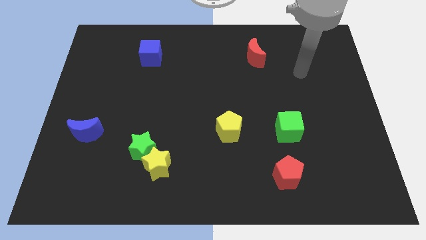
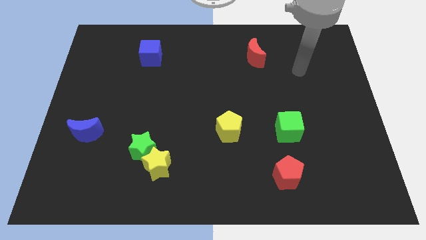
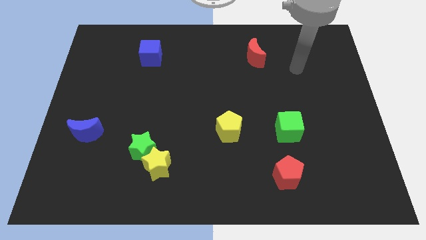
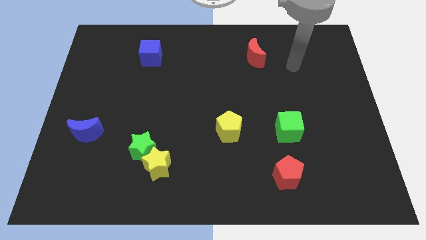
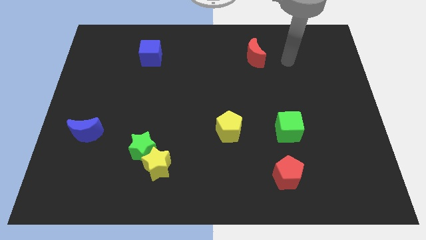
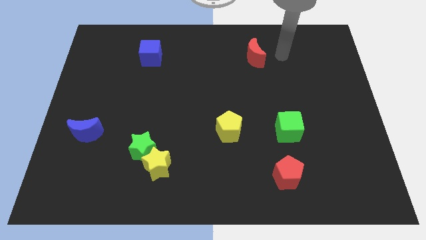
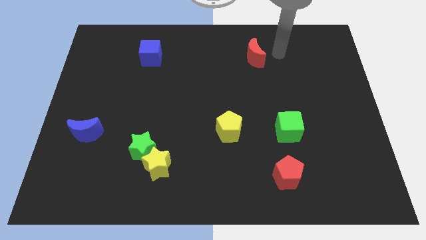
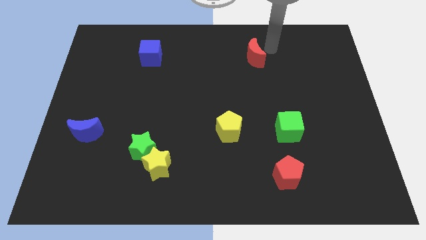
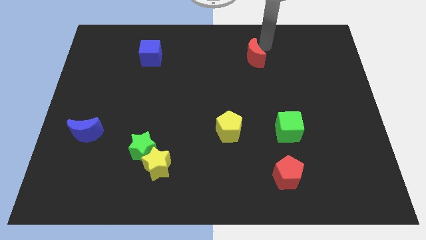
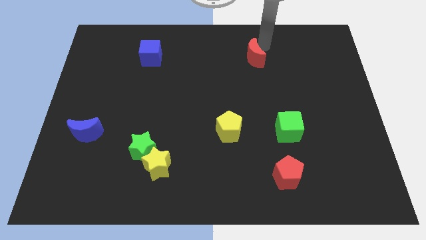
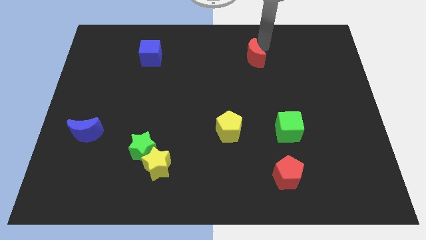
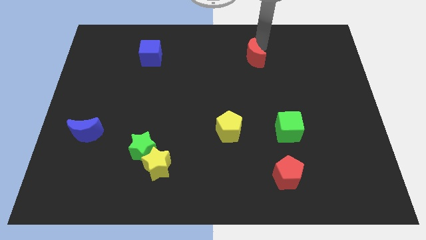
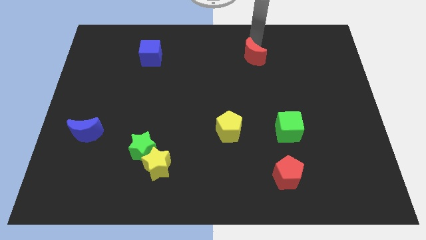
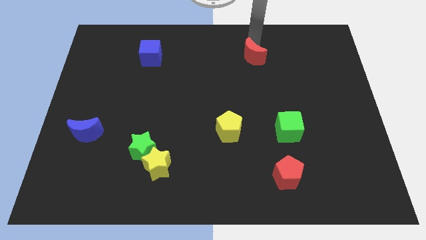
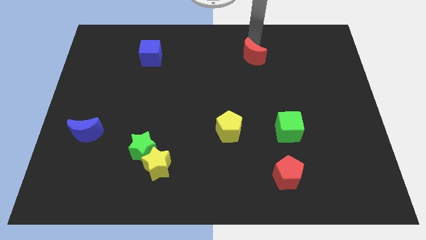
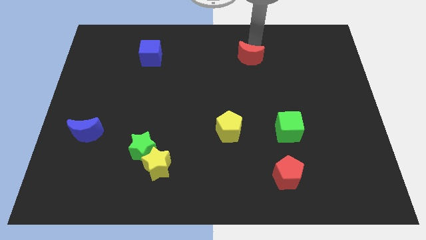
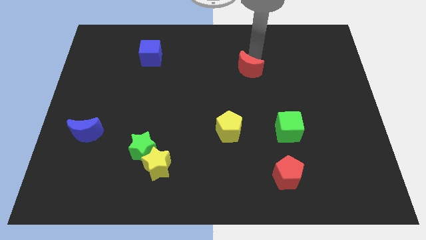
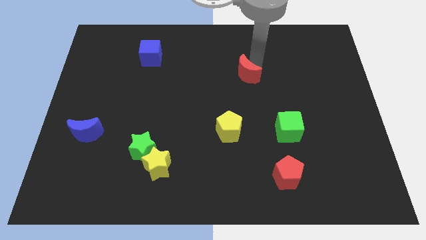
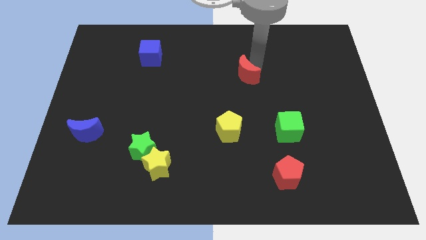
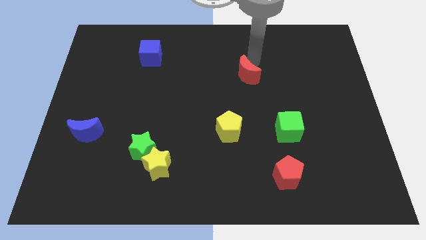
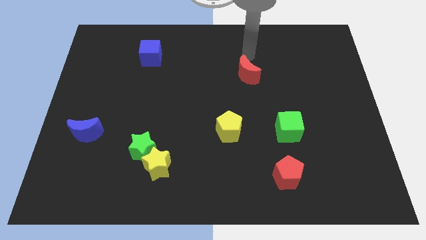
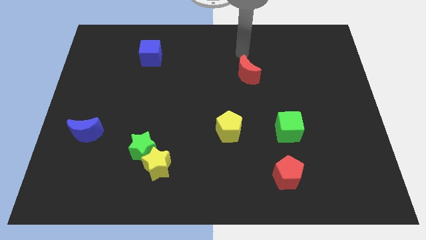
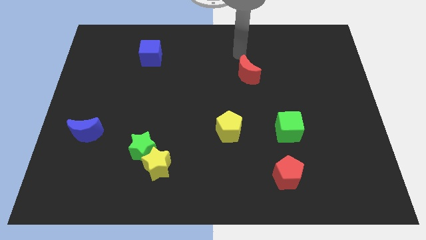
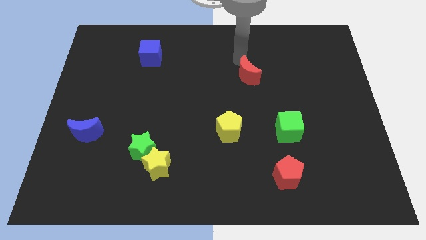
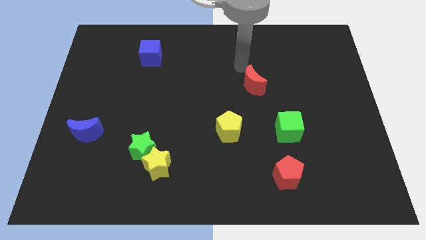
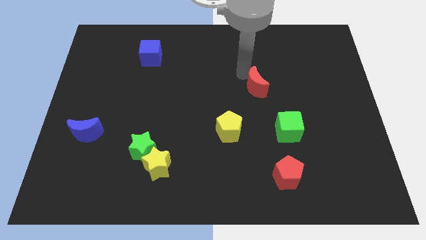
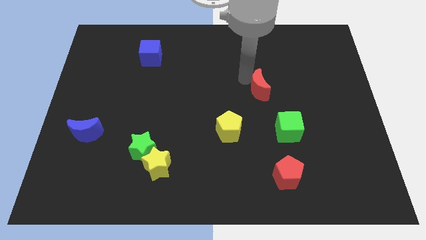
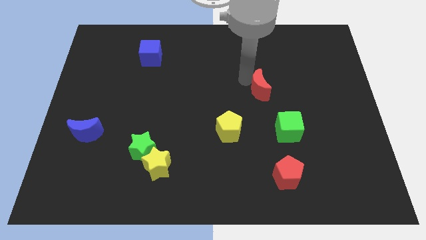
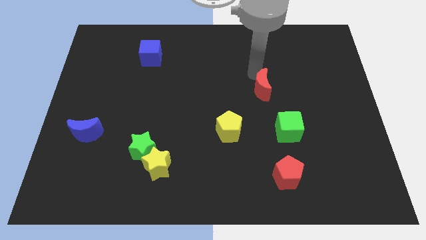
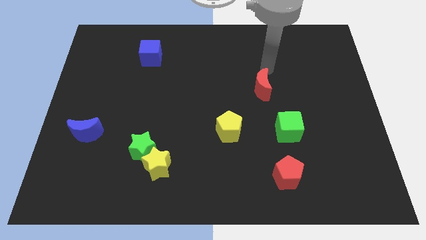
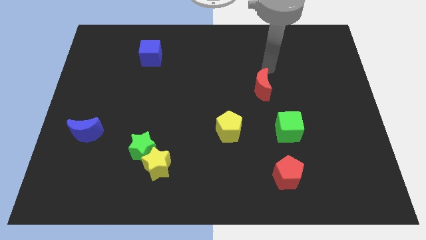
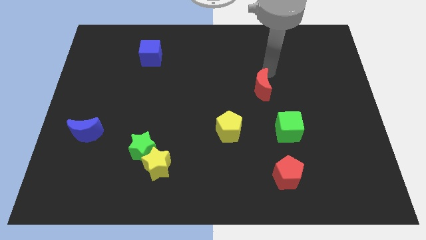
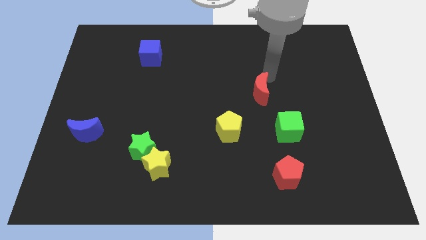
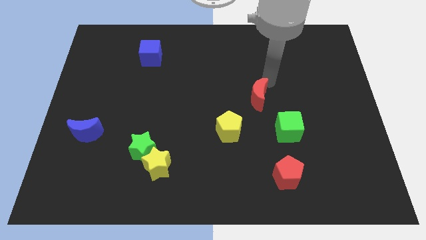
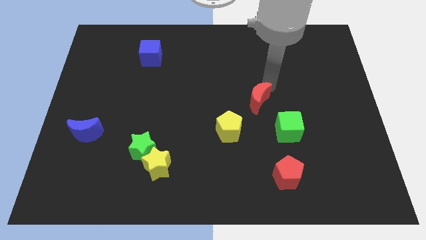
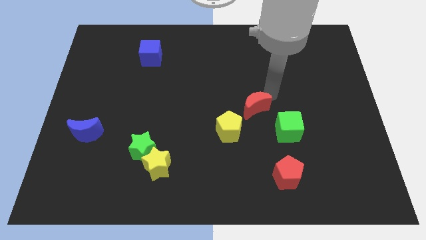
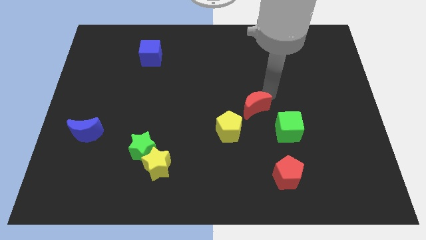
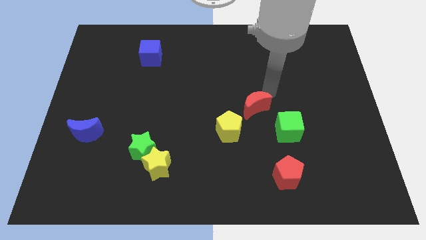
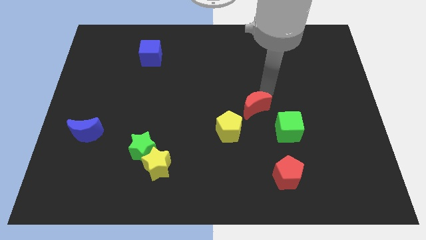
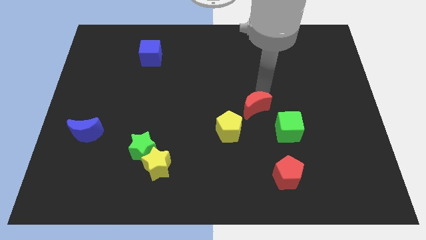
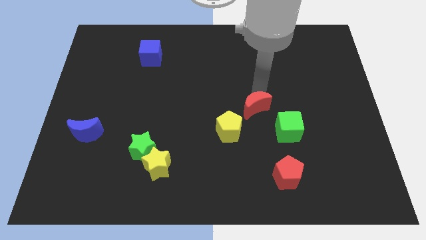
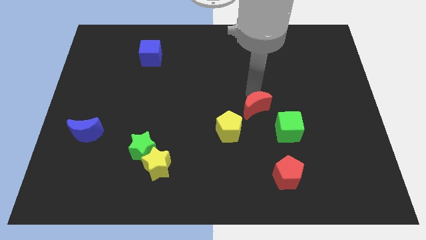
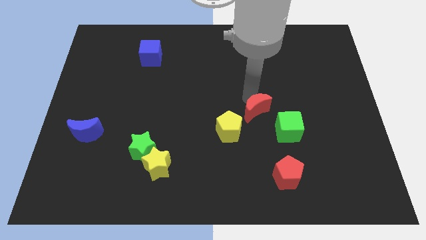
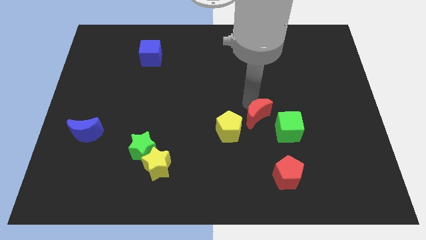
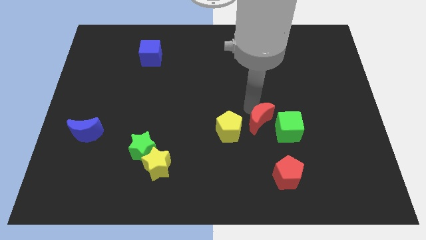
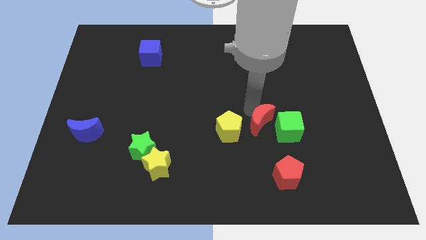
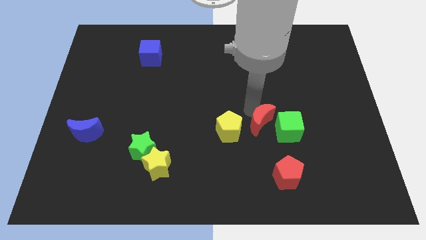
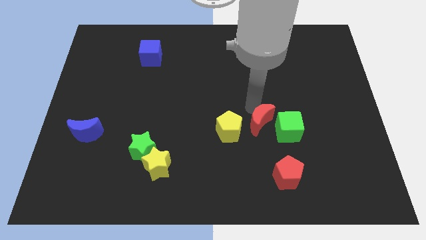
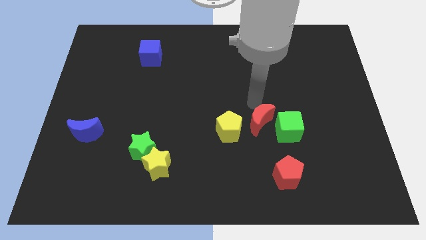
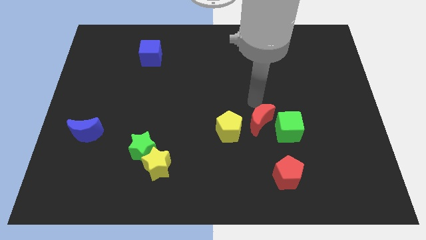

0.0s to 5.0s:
move the red crescent near to the green cube

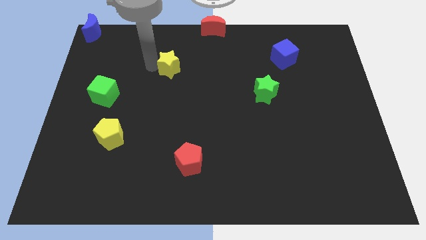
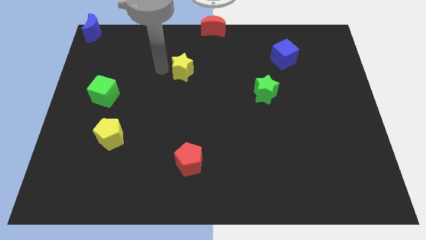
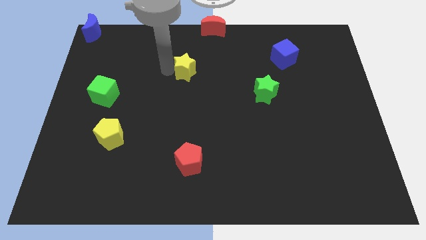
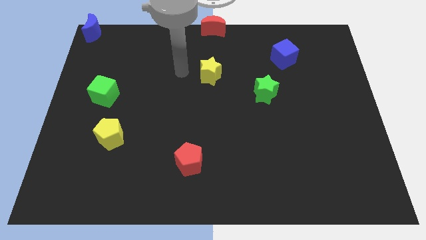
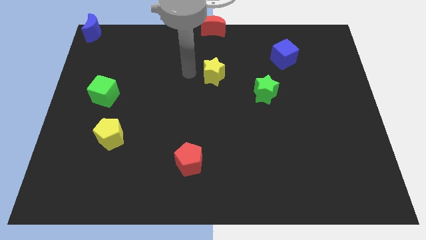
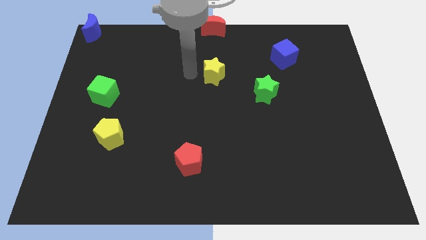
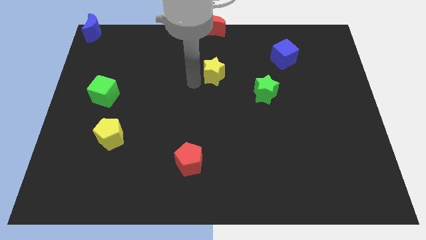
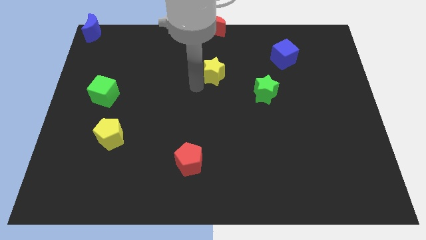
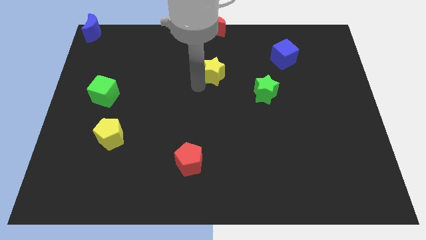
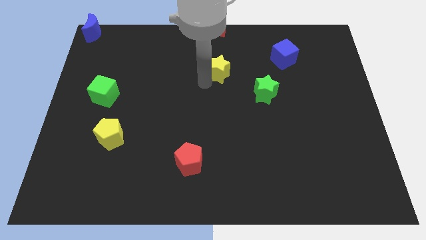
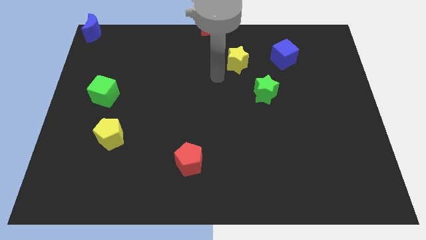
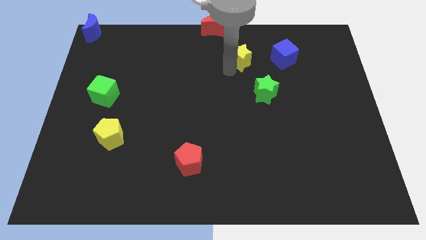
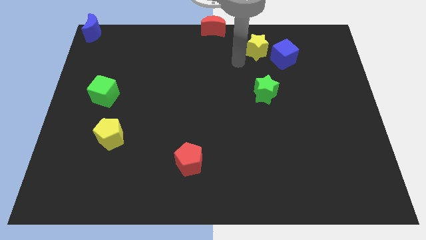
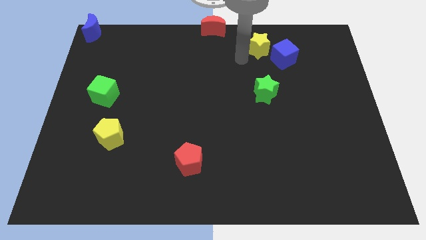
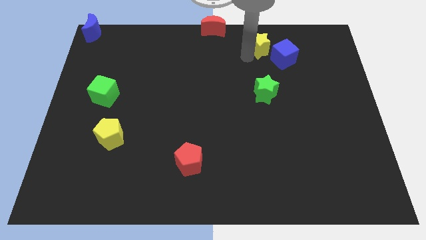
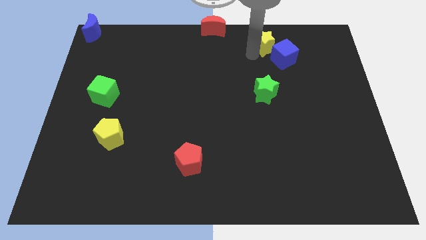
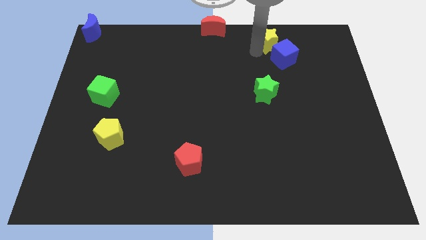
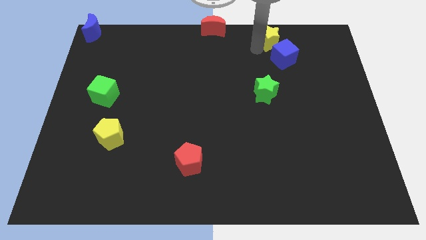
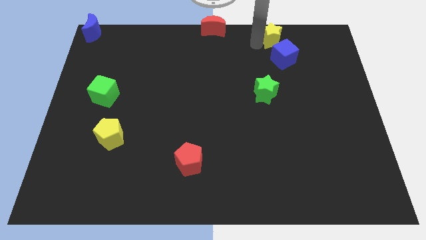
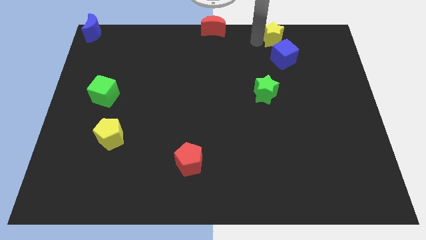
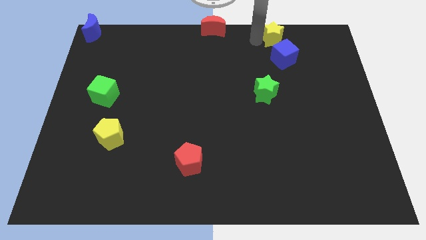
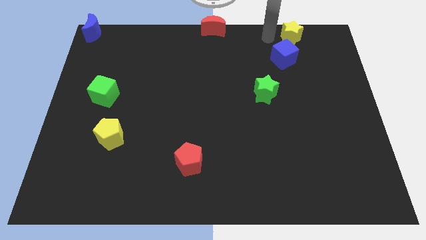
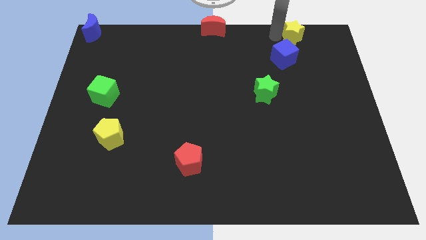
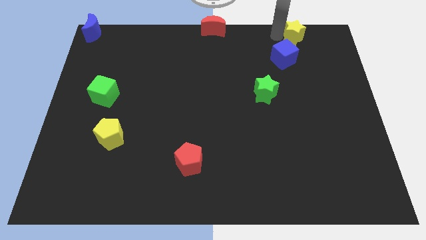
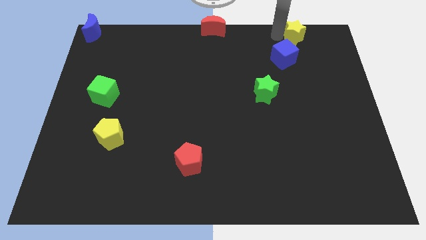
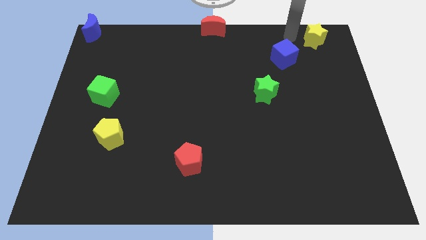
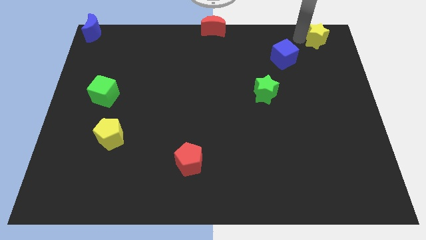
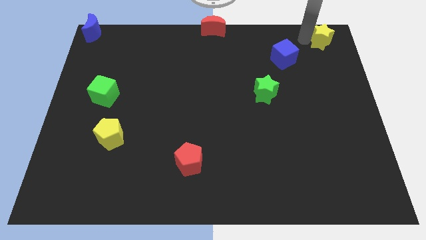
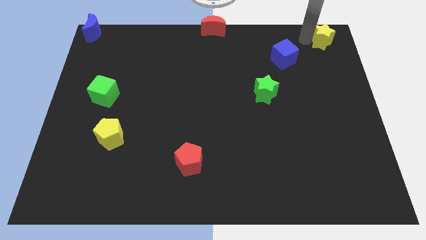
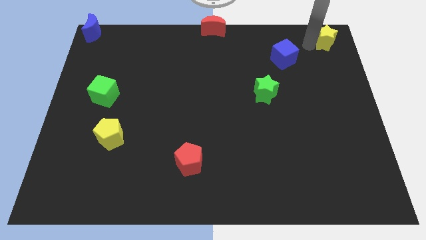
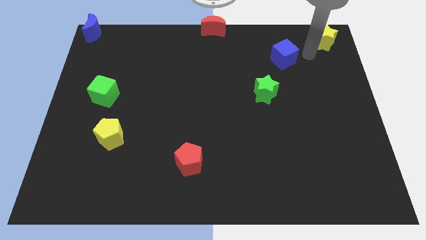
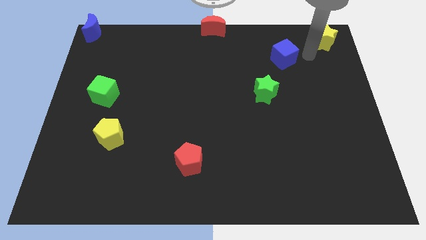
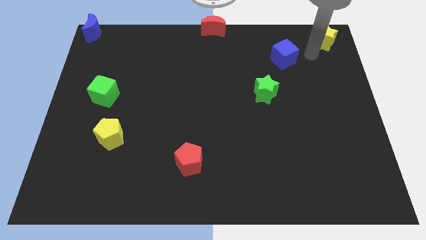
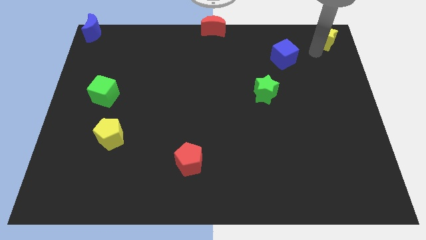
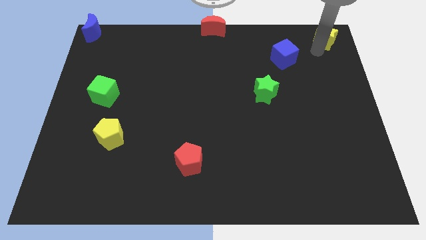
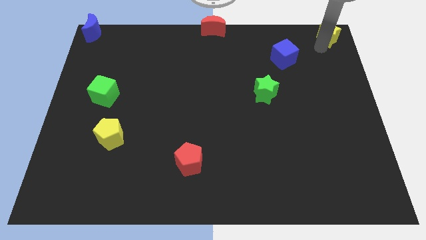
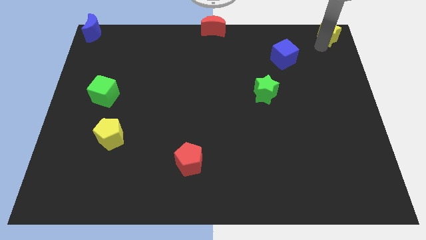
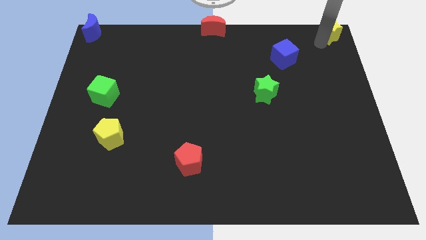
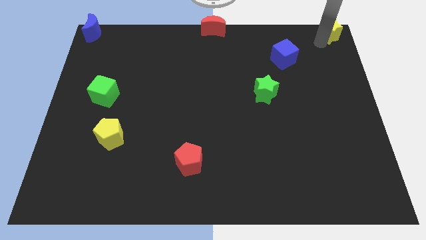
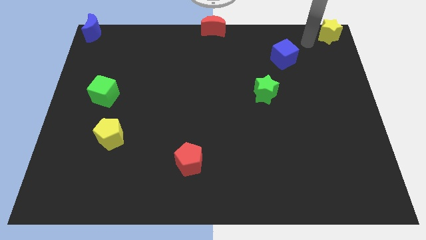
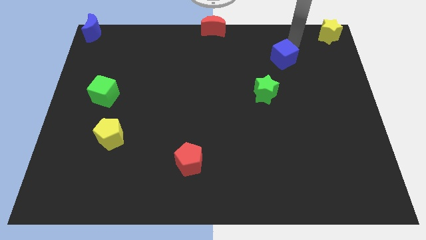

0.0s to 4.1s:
push yellow star to the top right corner
